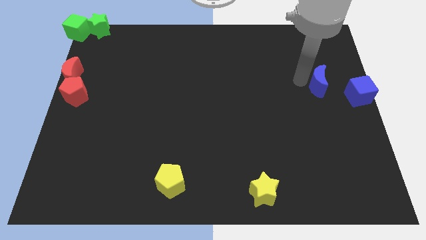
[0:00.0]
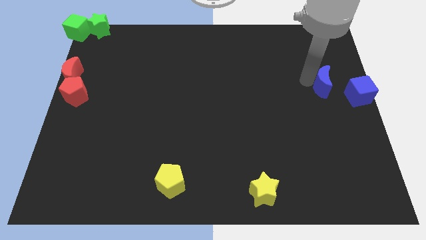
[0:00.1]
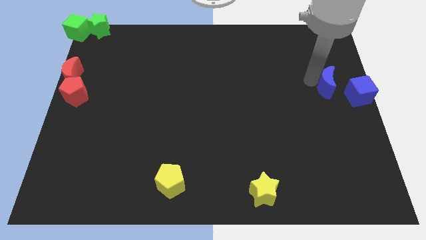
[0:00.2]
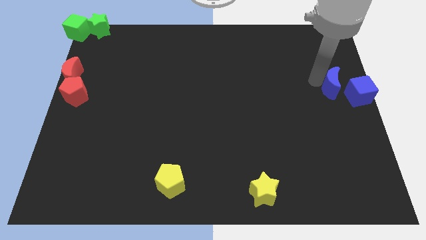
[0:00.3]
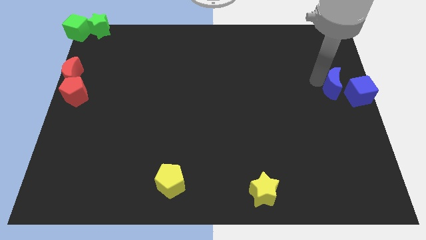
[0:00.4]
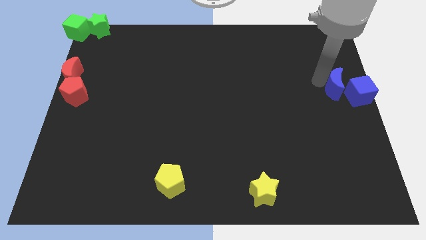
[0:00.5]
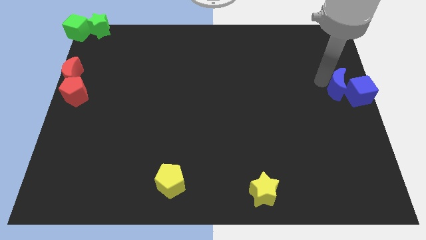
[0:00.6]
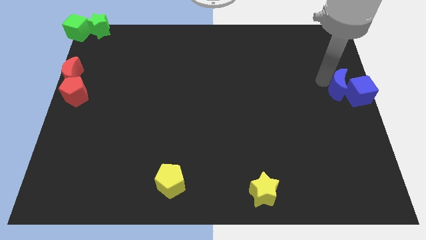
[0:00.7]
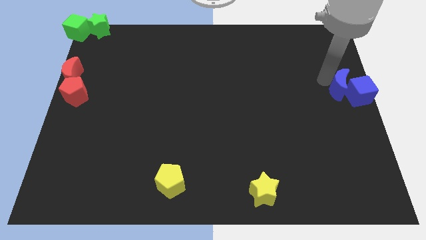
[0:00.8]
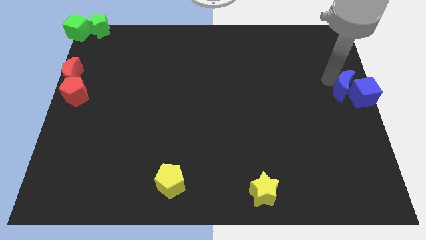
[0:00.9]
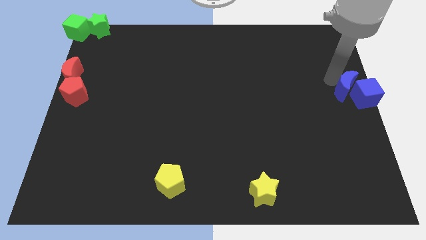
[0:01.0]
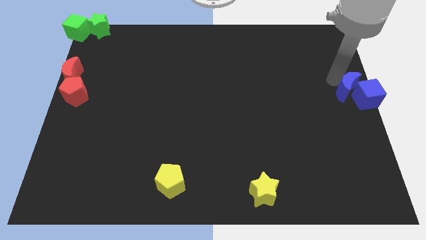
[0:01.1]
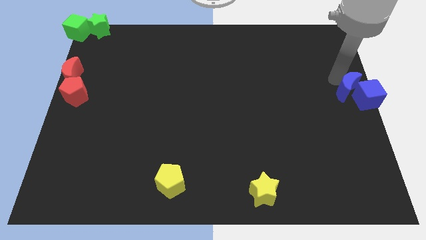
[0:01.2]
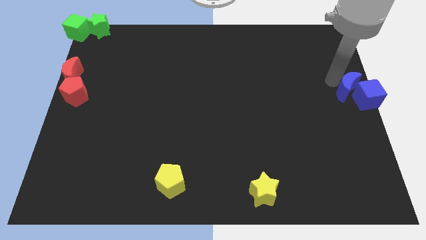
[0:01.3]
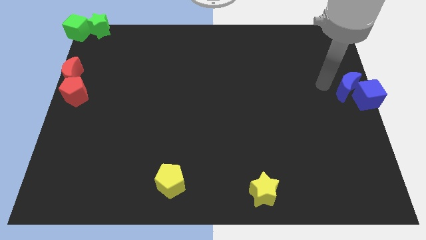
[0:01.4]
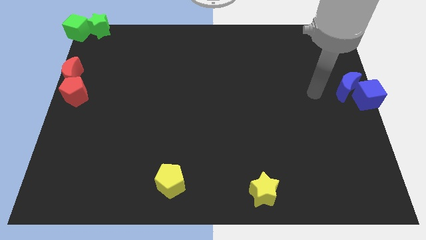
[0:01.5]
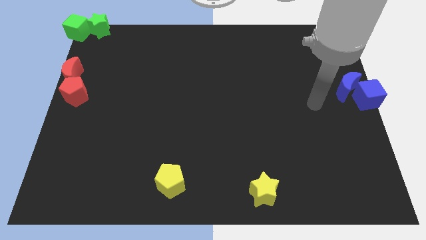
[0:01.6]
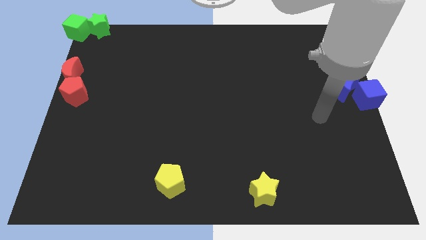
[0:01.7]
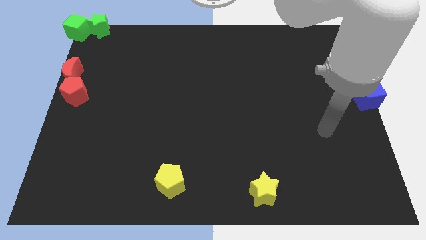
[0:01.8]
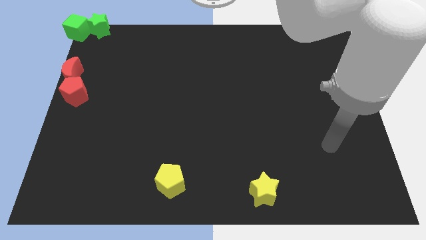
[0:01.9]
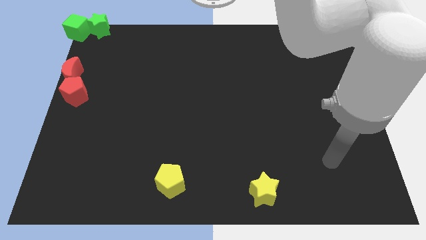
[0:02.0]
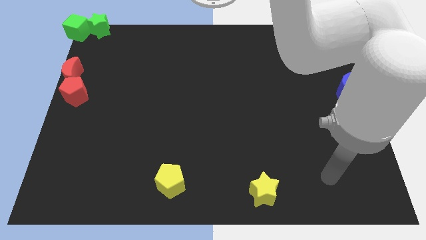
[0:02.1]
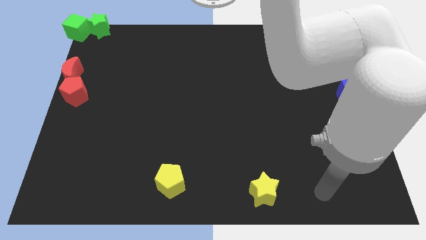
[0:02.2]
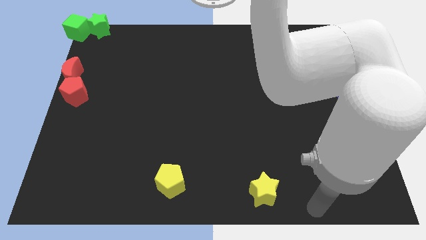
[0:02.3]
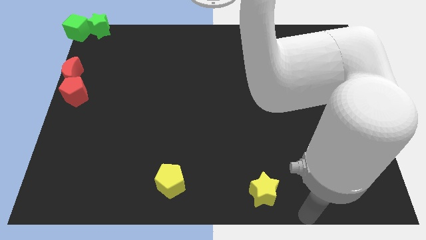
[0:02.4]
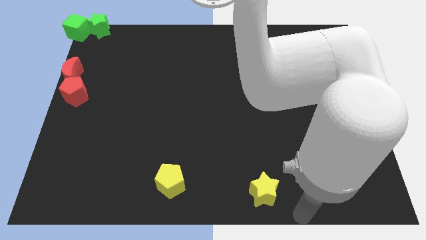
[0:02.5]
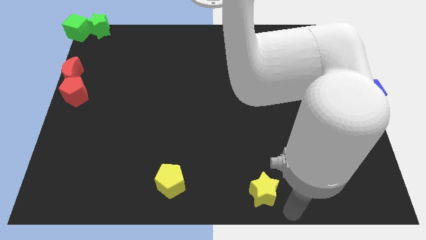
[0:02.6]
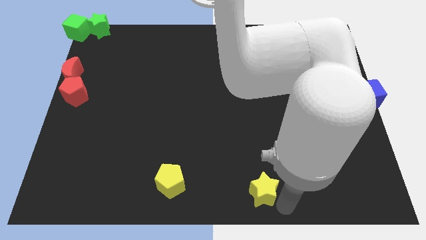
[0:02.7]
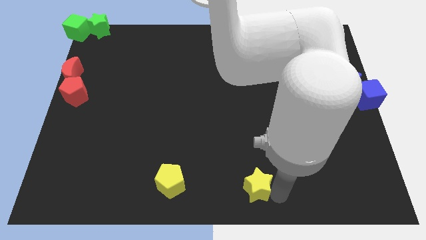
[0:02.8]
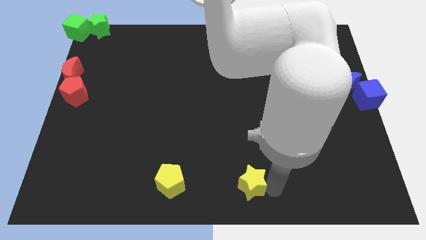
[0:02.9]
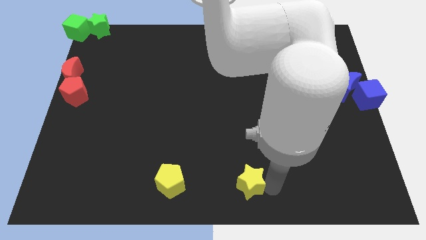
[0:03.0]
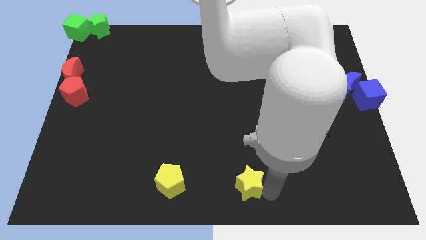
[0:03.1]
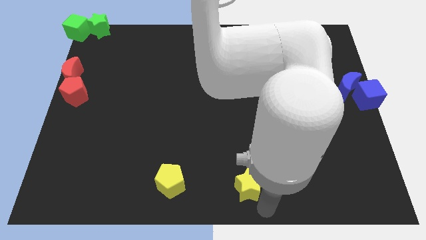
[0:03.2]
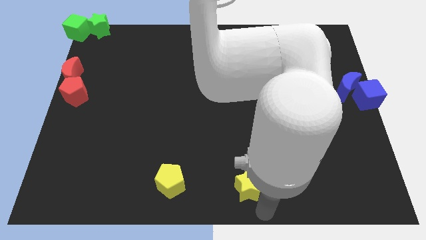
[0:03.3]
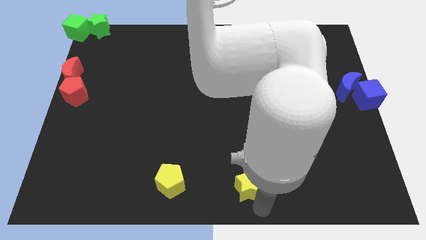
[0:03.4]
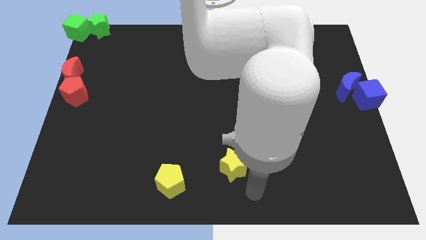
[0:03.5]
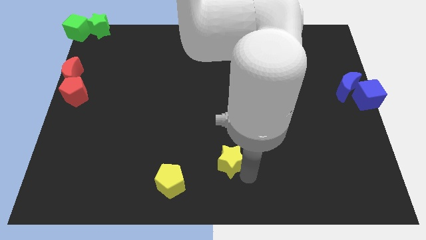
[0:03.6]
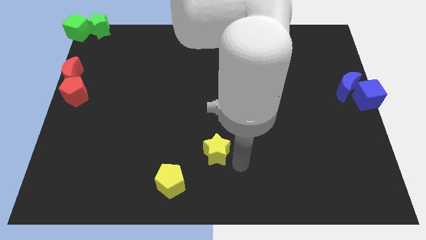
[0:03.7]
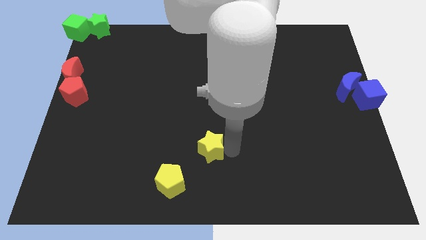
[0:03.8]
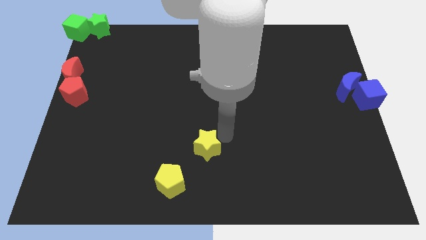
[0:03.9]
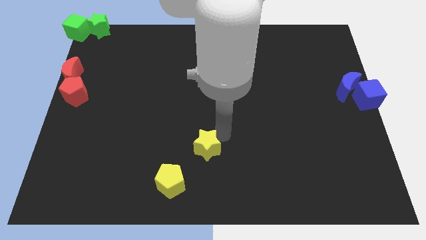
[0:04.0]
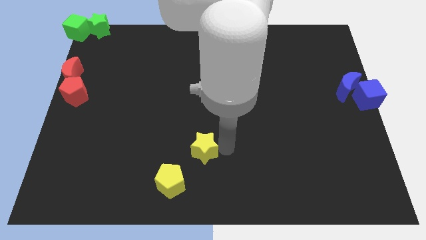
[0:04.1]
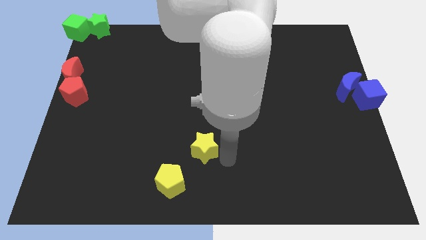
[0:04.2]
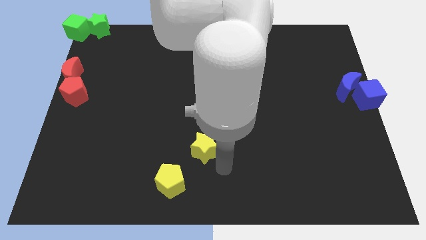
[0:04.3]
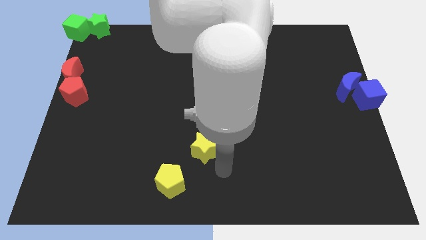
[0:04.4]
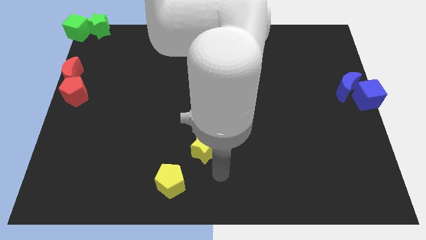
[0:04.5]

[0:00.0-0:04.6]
push the yellow star to the top right side of the yellow pentagon

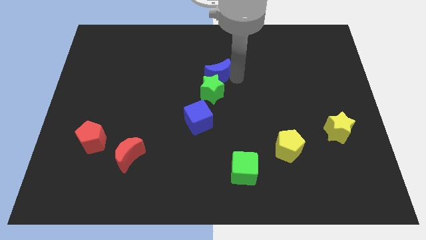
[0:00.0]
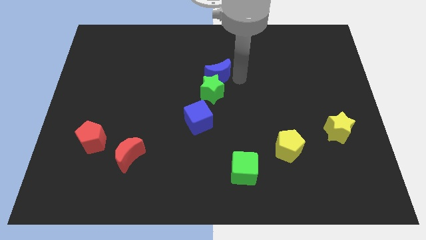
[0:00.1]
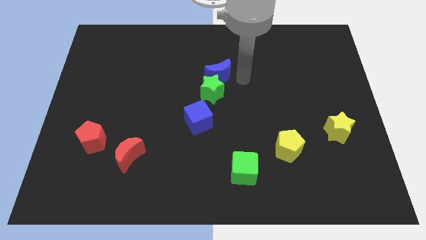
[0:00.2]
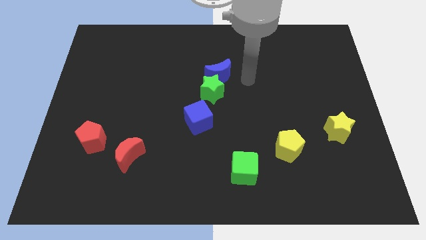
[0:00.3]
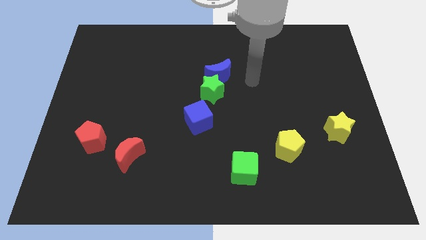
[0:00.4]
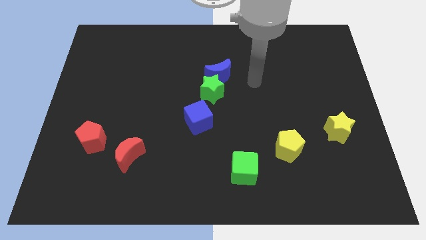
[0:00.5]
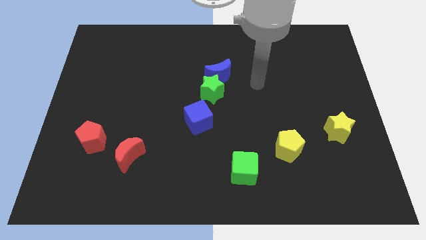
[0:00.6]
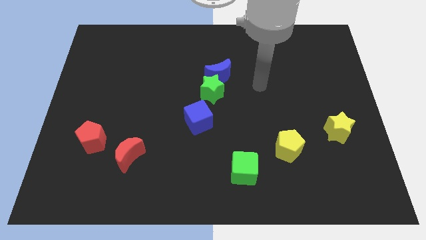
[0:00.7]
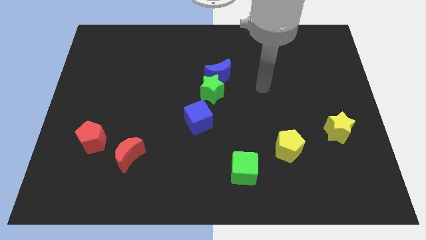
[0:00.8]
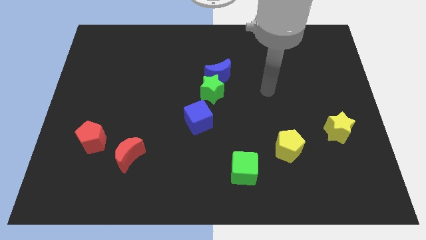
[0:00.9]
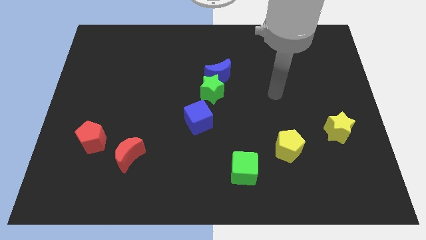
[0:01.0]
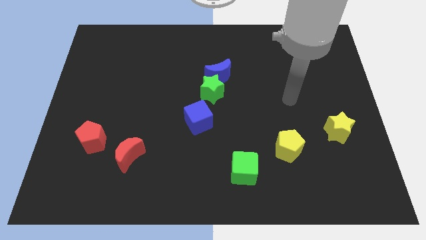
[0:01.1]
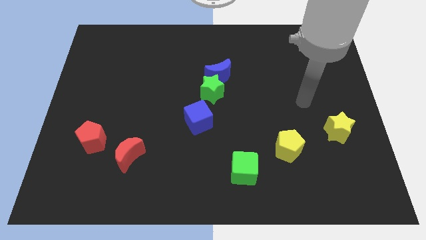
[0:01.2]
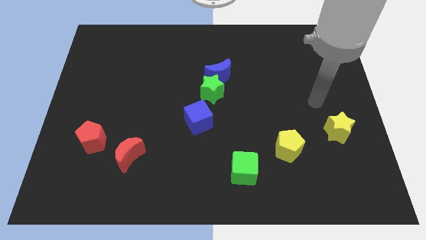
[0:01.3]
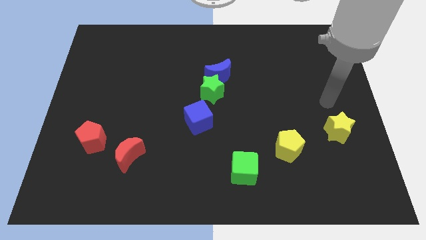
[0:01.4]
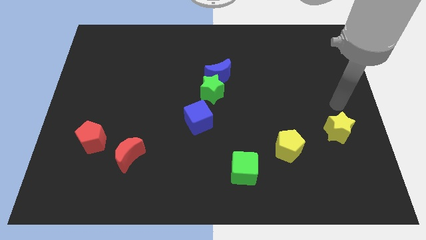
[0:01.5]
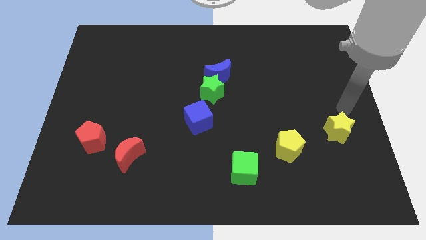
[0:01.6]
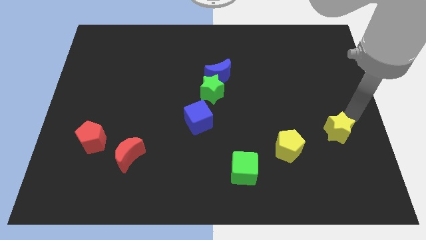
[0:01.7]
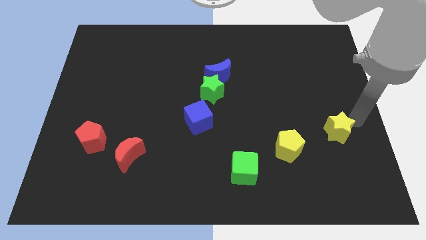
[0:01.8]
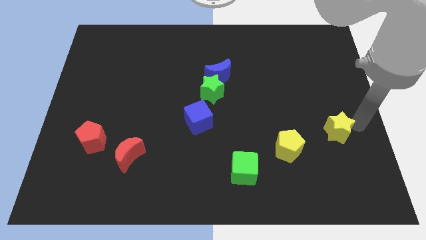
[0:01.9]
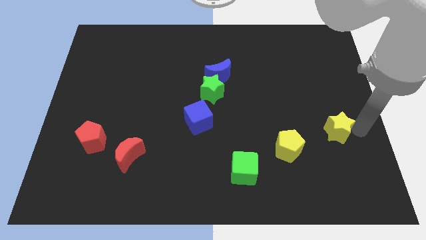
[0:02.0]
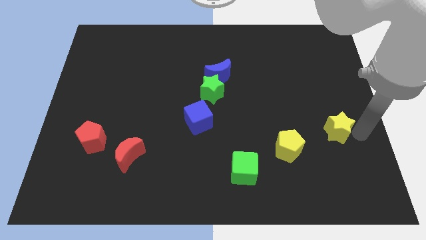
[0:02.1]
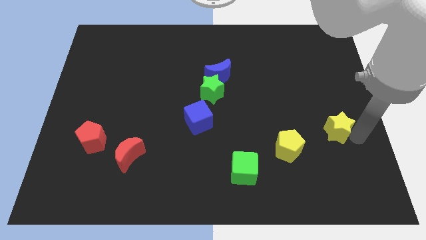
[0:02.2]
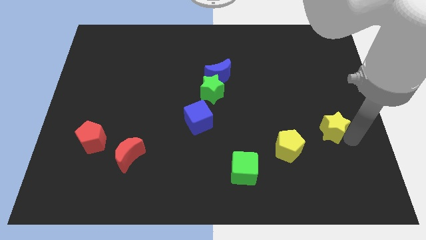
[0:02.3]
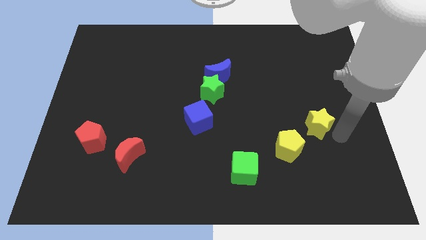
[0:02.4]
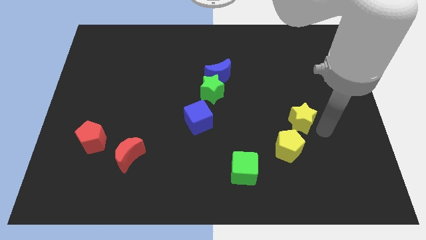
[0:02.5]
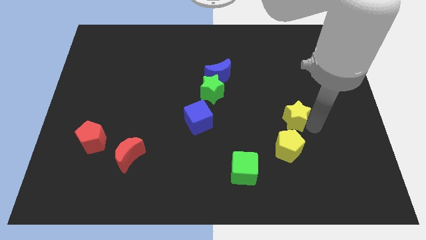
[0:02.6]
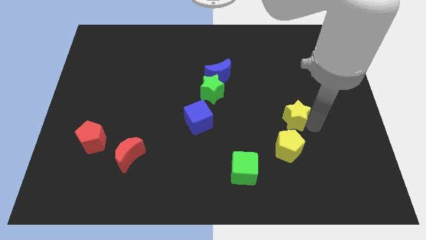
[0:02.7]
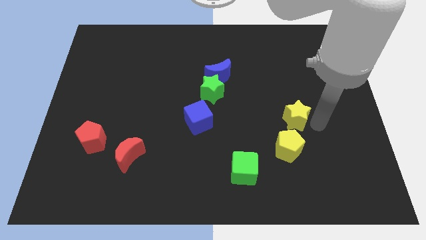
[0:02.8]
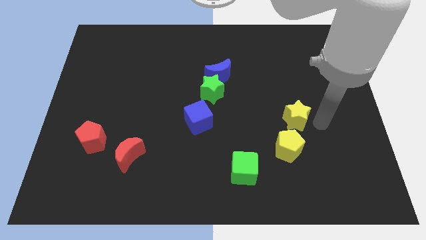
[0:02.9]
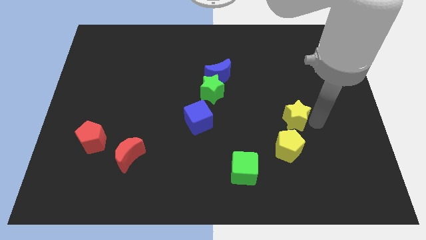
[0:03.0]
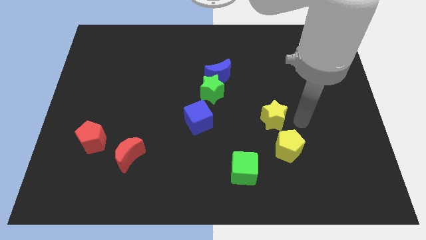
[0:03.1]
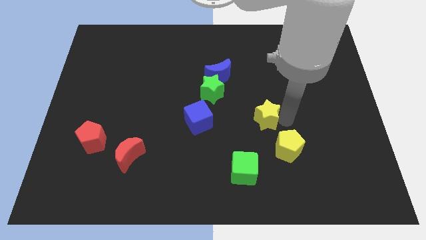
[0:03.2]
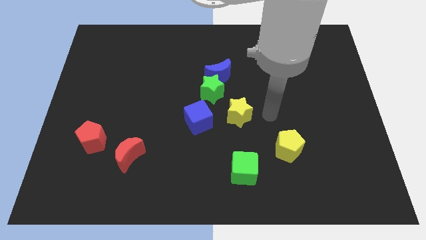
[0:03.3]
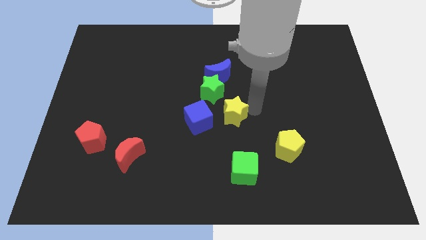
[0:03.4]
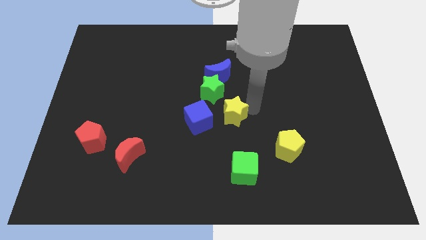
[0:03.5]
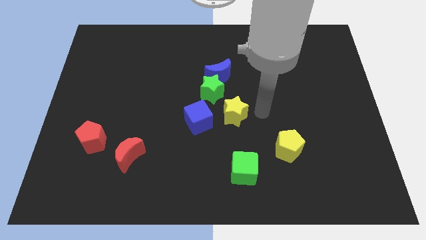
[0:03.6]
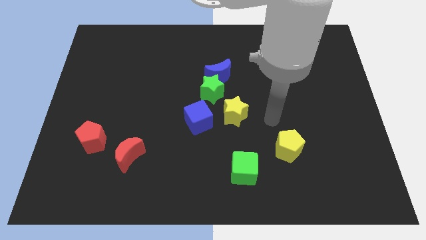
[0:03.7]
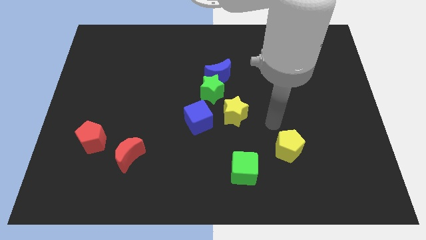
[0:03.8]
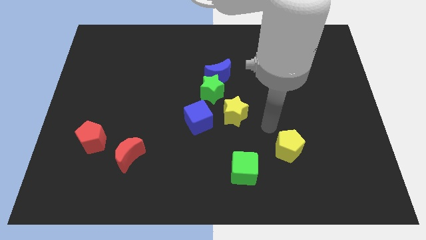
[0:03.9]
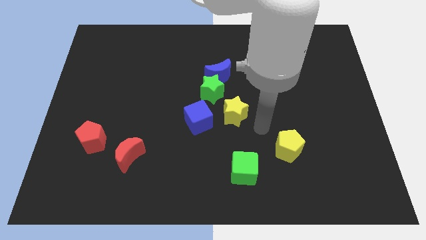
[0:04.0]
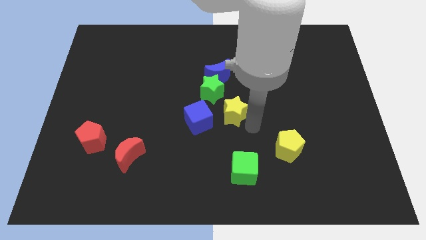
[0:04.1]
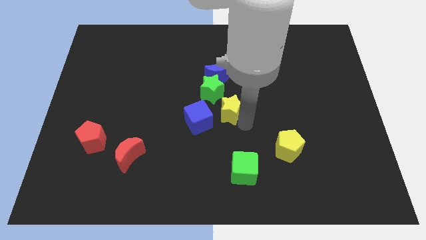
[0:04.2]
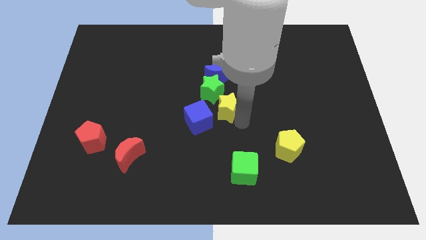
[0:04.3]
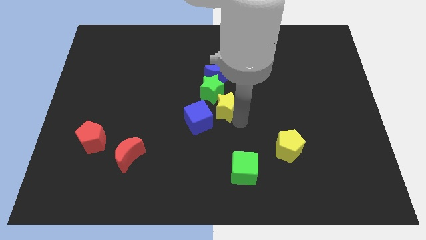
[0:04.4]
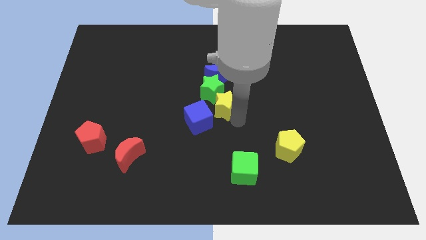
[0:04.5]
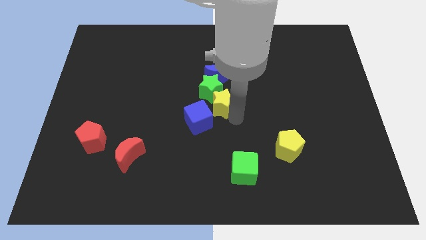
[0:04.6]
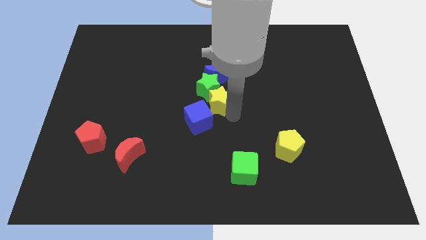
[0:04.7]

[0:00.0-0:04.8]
push the yellow star close to the green star
